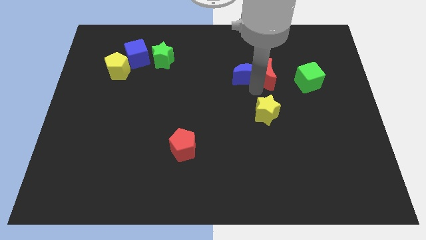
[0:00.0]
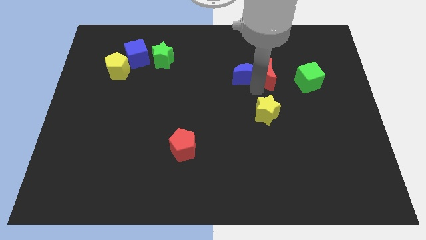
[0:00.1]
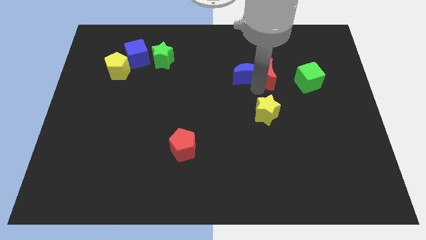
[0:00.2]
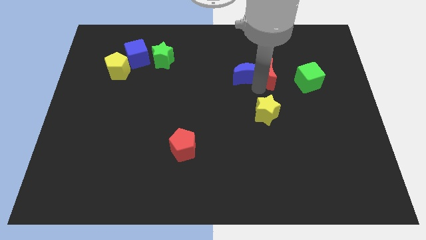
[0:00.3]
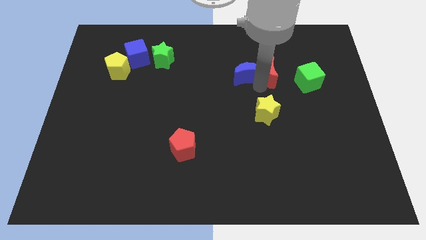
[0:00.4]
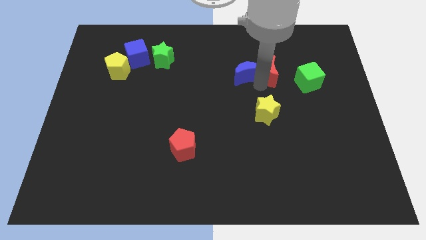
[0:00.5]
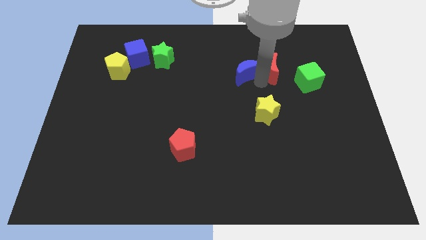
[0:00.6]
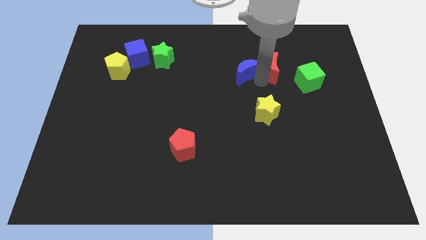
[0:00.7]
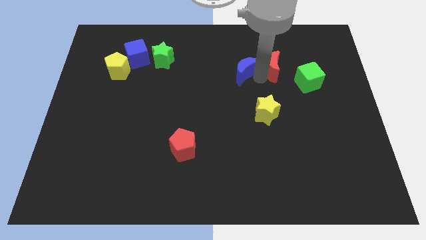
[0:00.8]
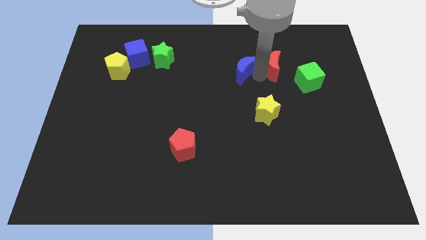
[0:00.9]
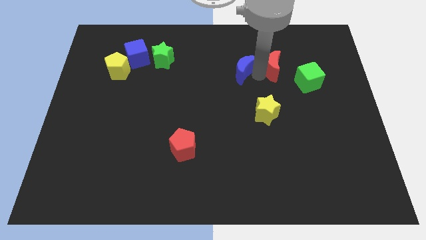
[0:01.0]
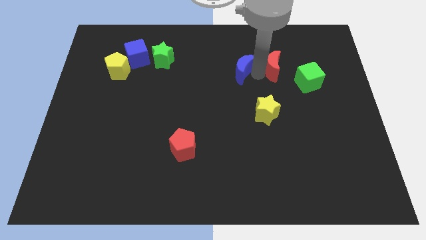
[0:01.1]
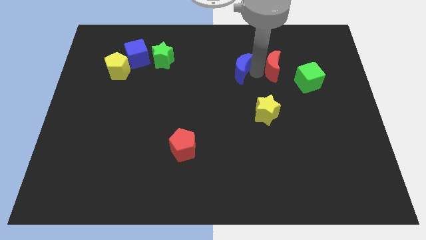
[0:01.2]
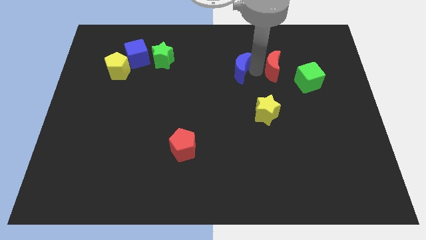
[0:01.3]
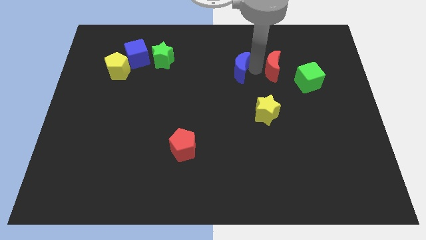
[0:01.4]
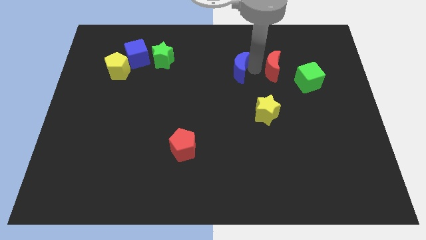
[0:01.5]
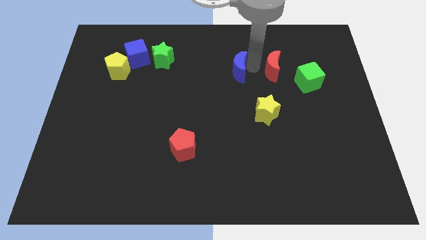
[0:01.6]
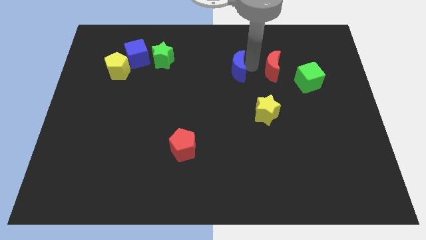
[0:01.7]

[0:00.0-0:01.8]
push the blue crescent slightly to the left

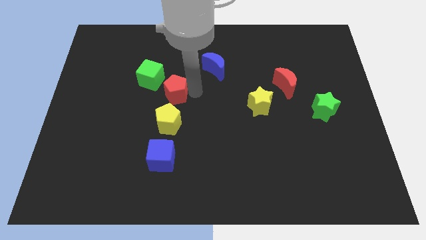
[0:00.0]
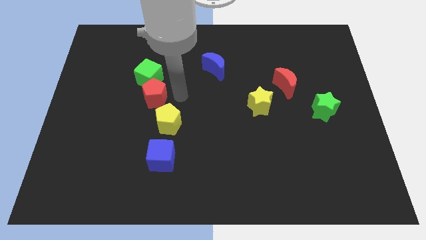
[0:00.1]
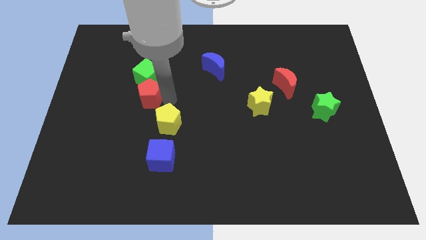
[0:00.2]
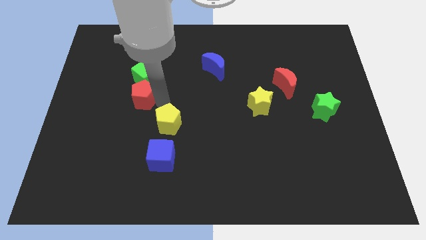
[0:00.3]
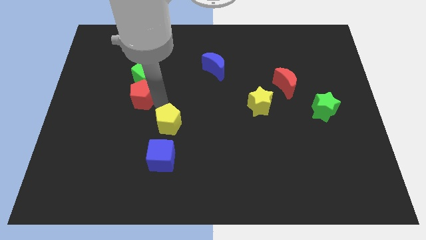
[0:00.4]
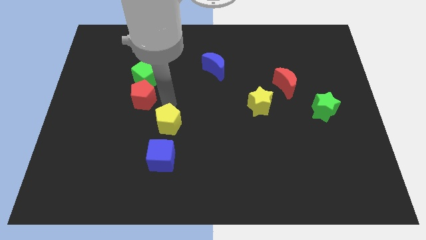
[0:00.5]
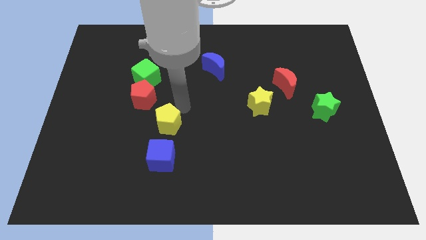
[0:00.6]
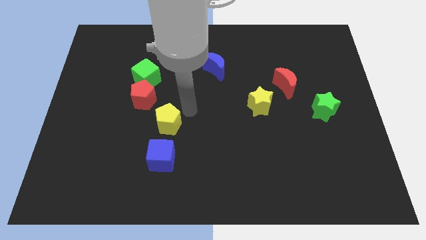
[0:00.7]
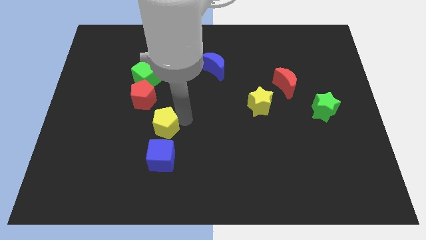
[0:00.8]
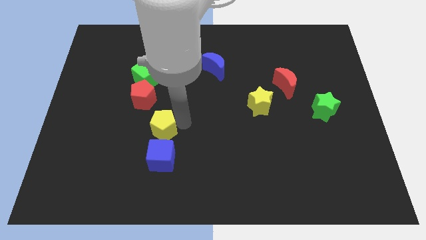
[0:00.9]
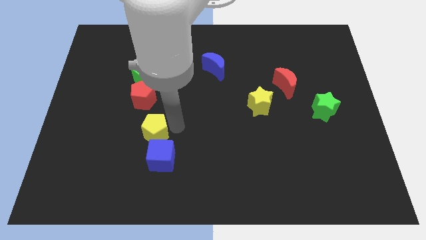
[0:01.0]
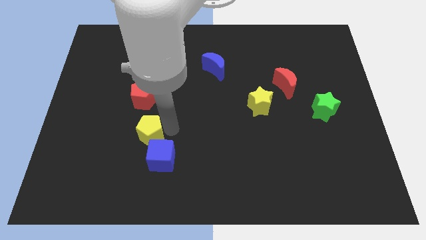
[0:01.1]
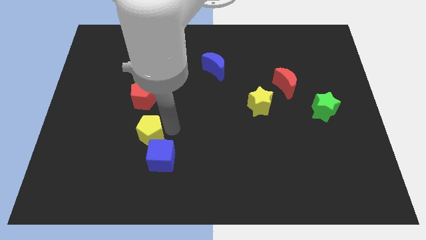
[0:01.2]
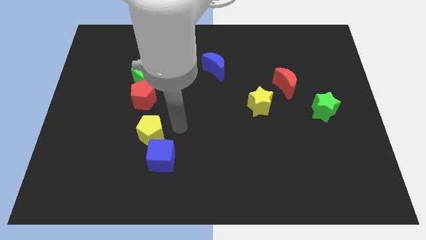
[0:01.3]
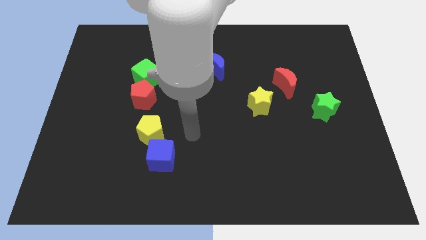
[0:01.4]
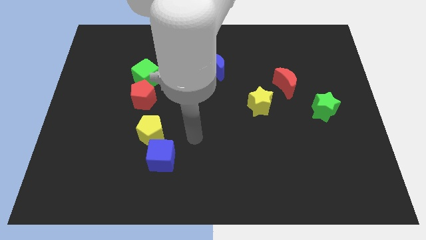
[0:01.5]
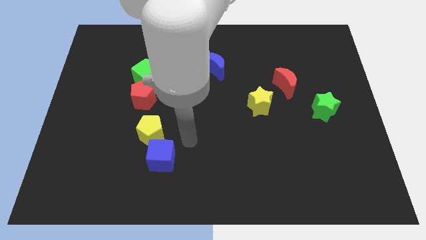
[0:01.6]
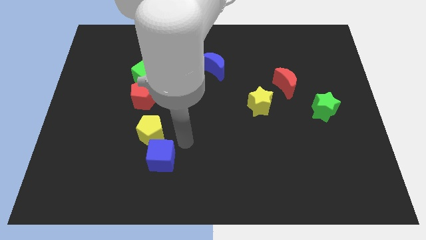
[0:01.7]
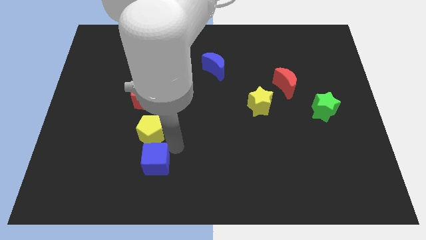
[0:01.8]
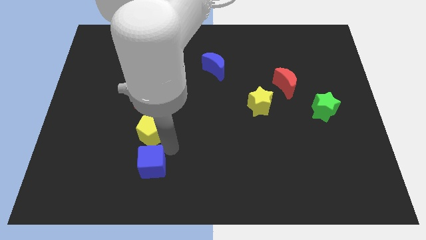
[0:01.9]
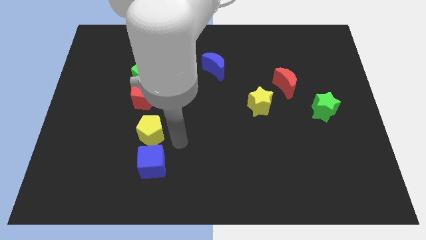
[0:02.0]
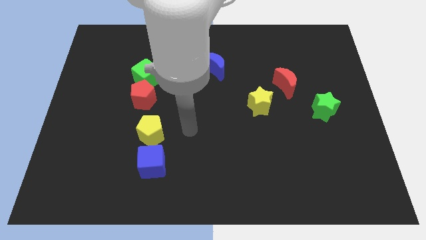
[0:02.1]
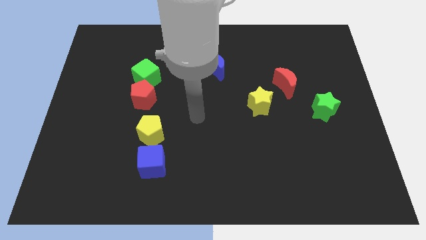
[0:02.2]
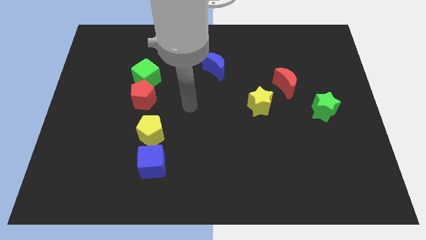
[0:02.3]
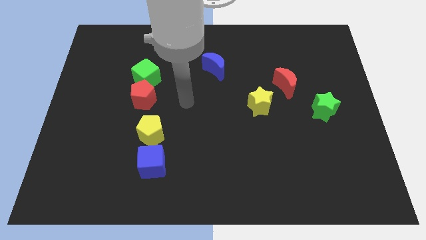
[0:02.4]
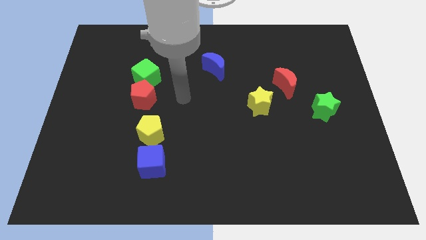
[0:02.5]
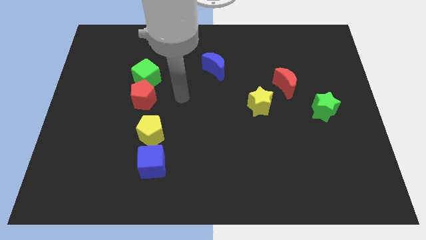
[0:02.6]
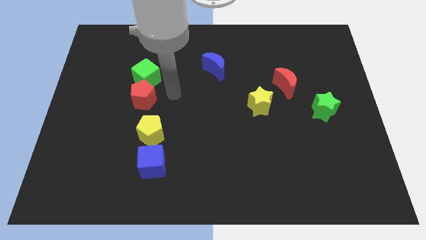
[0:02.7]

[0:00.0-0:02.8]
push the red pentagon yellow pentagon and the blue cube slightly to the left to form a doagonal line

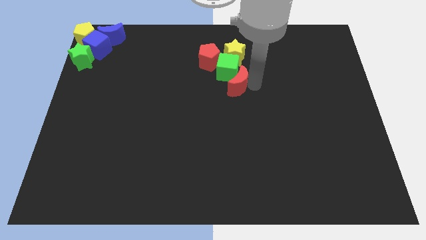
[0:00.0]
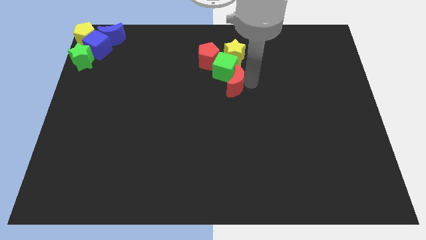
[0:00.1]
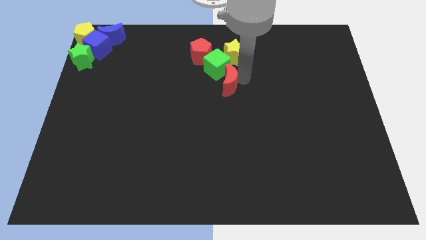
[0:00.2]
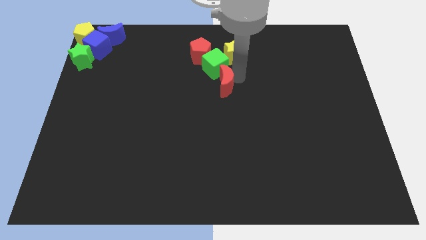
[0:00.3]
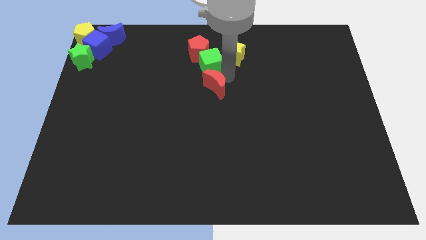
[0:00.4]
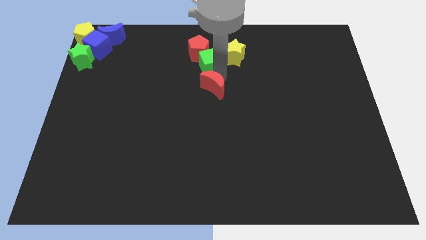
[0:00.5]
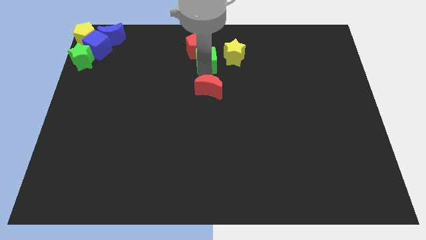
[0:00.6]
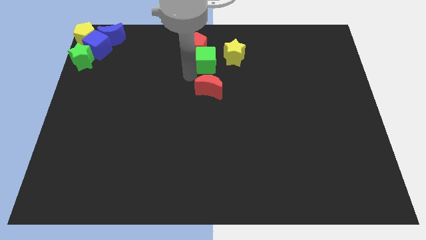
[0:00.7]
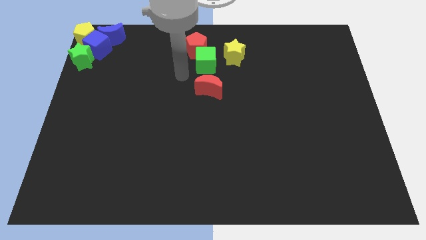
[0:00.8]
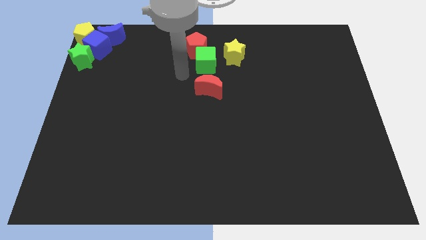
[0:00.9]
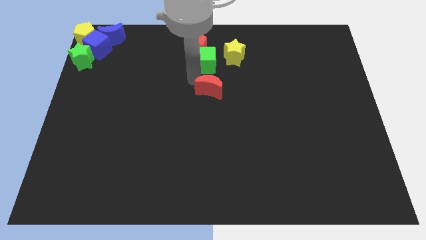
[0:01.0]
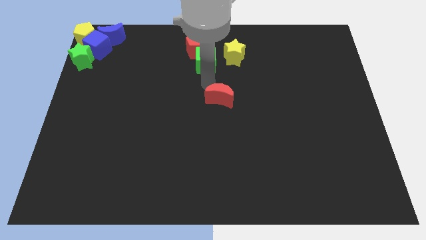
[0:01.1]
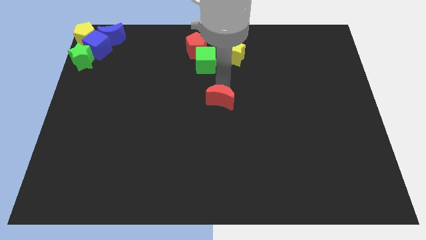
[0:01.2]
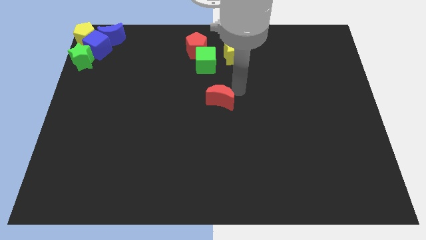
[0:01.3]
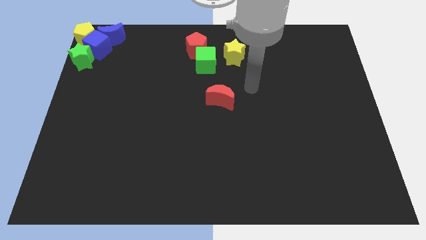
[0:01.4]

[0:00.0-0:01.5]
separate the red crescent from the group of blocks

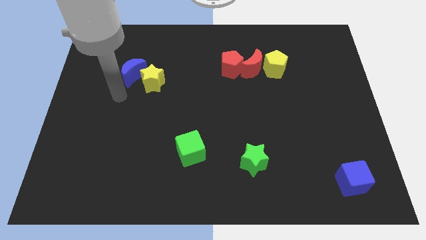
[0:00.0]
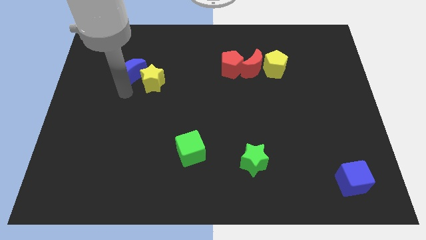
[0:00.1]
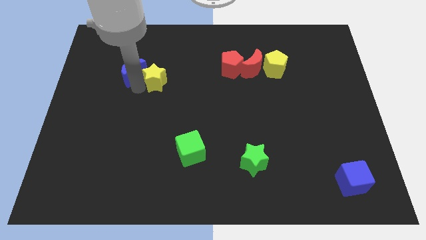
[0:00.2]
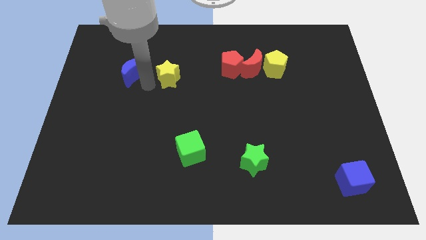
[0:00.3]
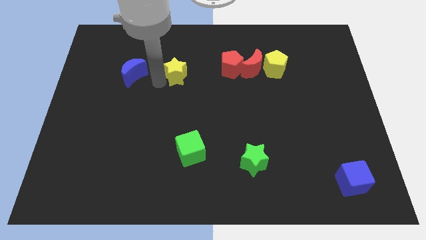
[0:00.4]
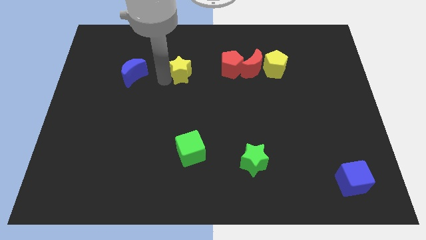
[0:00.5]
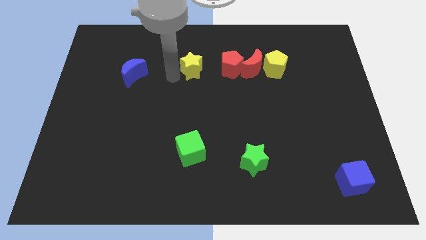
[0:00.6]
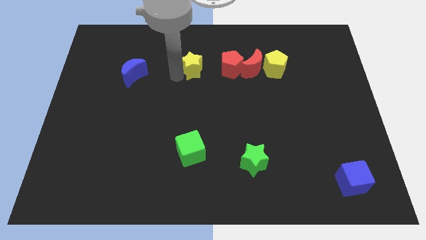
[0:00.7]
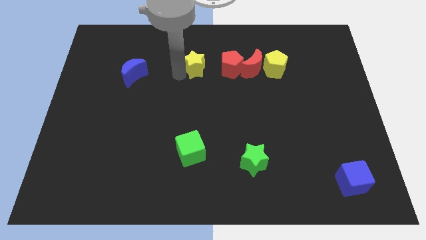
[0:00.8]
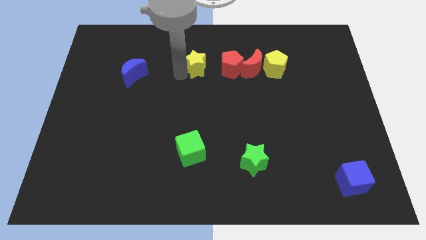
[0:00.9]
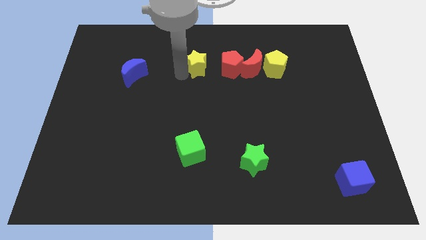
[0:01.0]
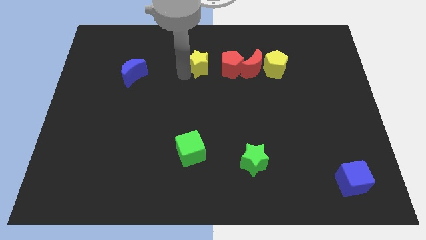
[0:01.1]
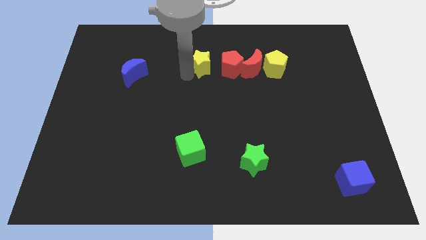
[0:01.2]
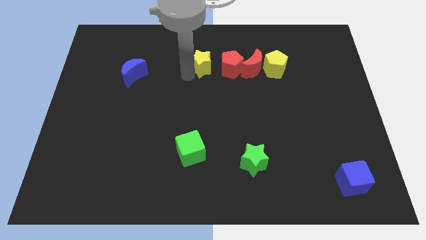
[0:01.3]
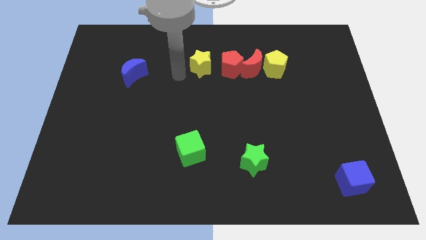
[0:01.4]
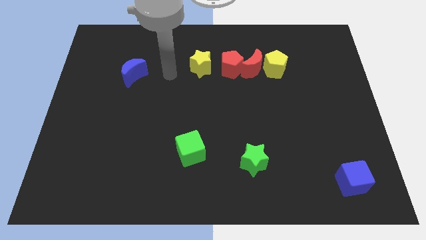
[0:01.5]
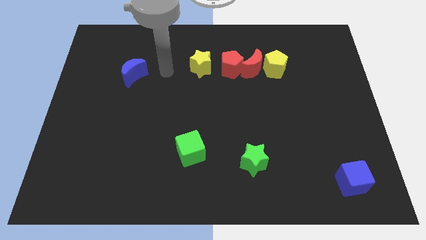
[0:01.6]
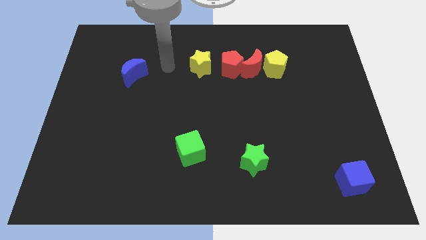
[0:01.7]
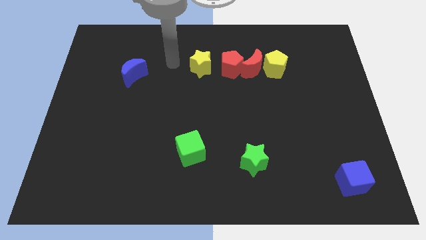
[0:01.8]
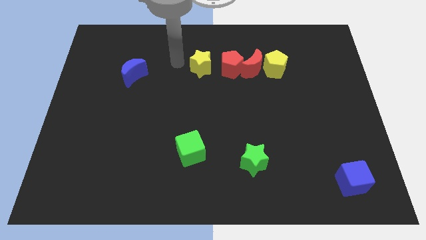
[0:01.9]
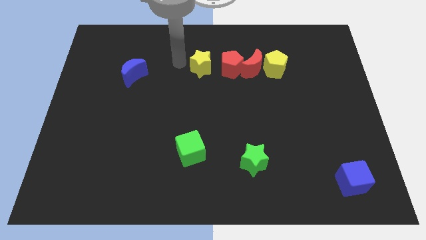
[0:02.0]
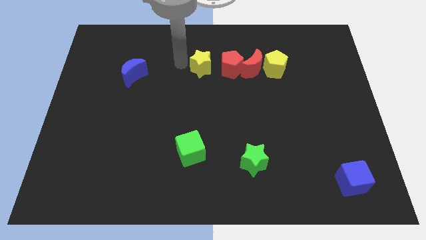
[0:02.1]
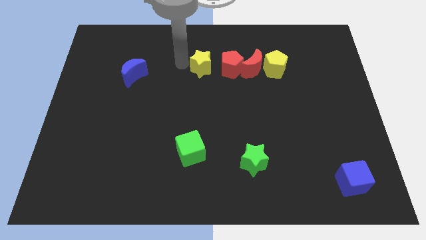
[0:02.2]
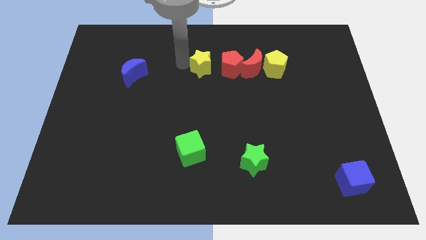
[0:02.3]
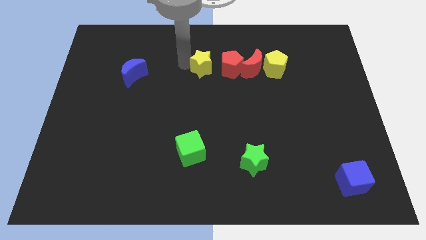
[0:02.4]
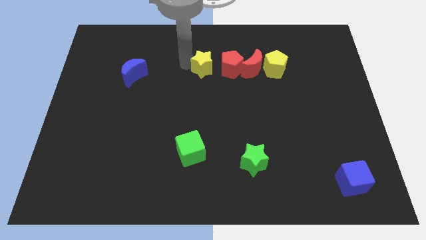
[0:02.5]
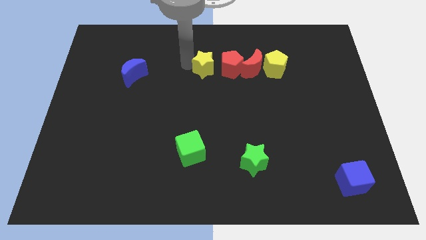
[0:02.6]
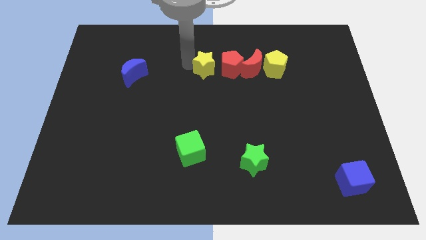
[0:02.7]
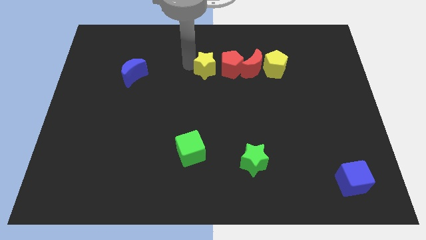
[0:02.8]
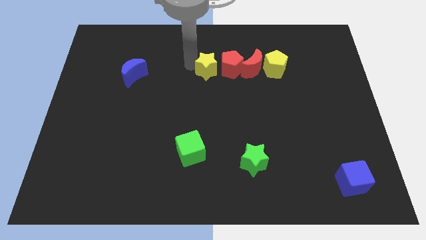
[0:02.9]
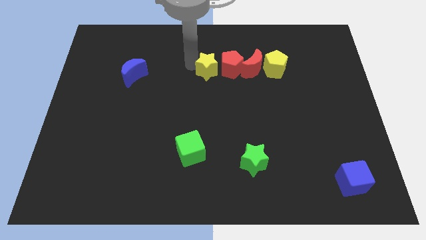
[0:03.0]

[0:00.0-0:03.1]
push the yellow star near to the left side of the red pentagon
